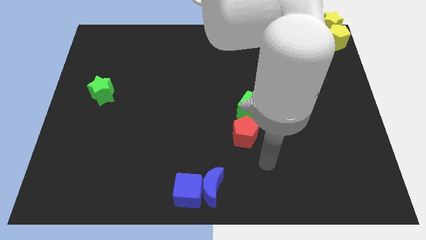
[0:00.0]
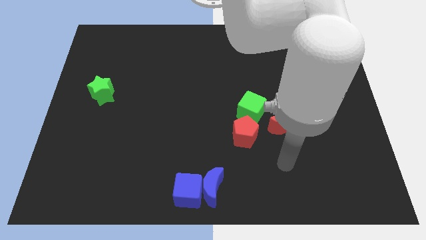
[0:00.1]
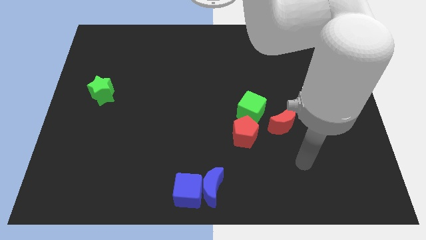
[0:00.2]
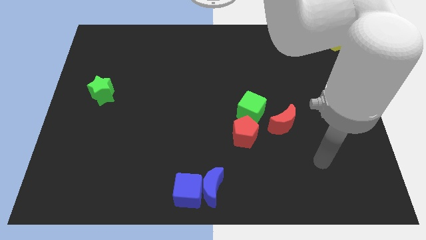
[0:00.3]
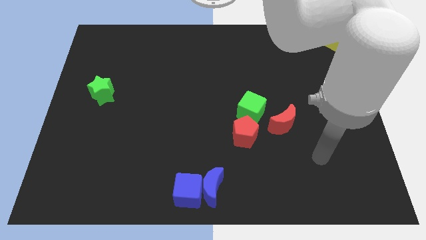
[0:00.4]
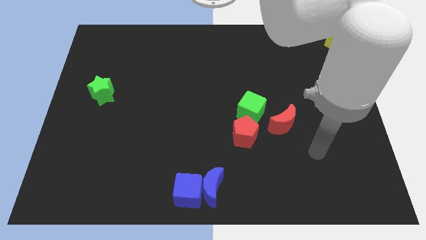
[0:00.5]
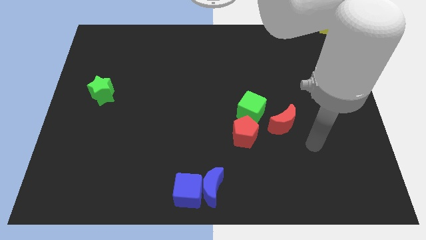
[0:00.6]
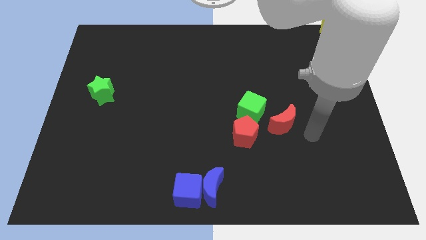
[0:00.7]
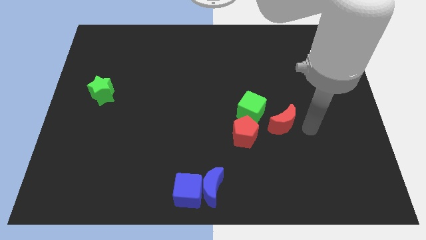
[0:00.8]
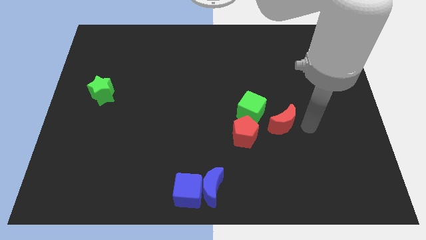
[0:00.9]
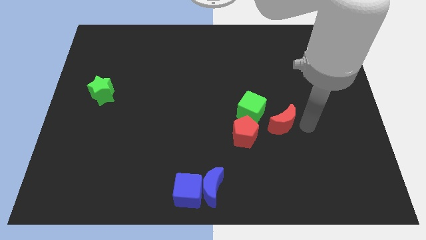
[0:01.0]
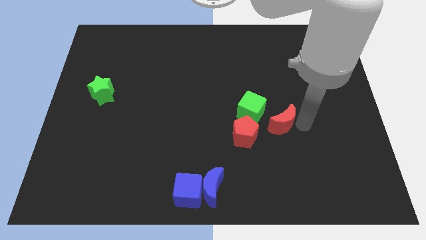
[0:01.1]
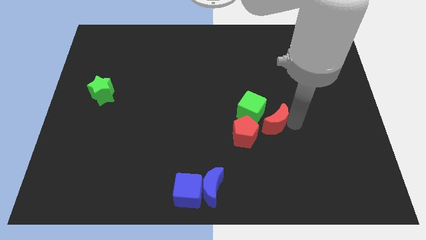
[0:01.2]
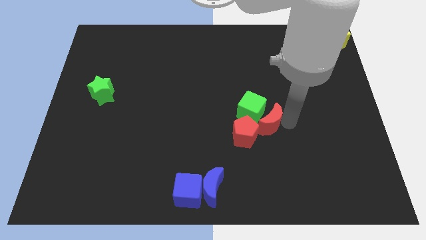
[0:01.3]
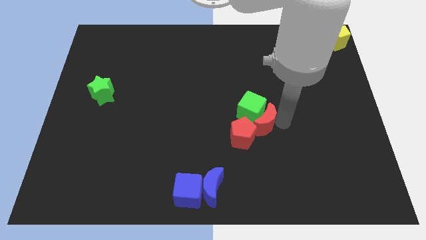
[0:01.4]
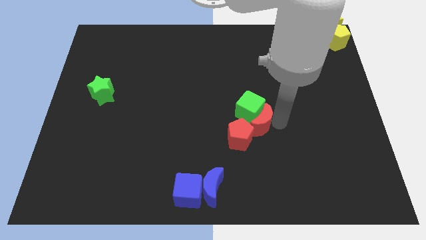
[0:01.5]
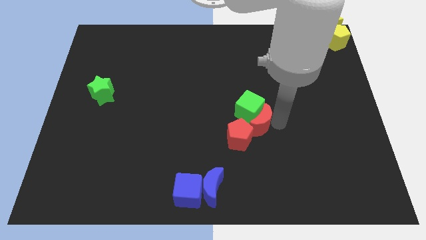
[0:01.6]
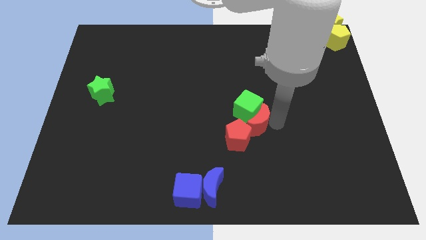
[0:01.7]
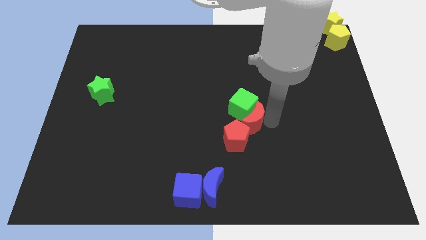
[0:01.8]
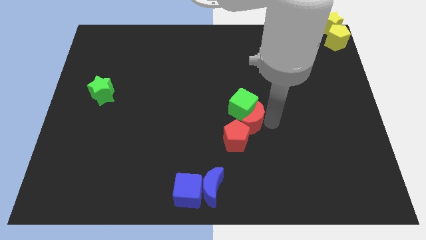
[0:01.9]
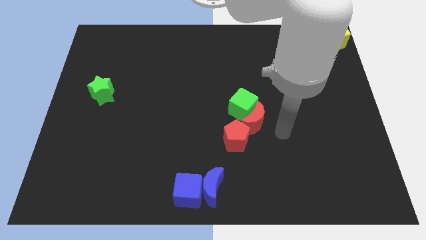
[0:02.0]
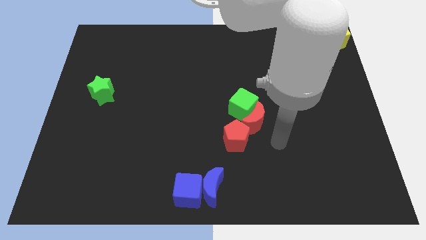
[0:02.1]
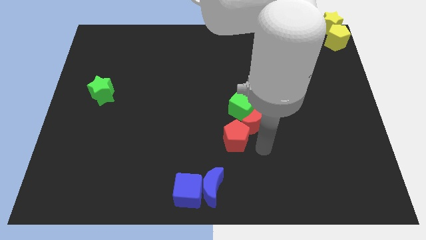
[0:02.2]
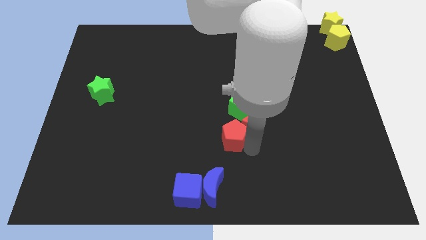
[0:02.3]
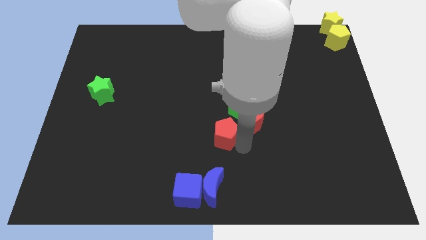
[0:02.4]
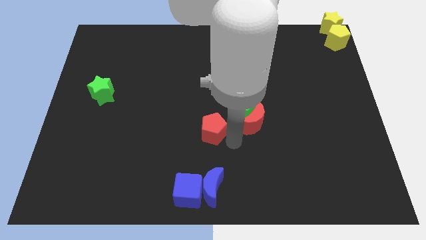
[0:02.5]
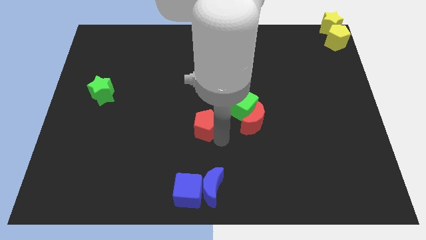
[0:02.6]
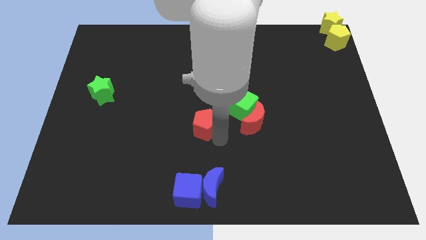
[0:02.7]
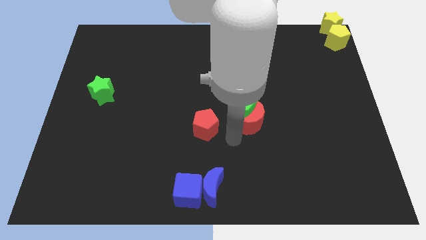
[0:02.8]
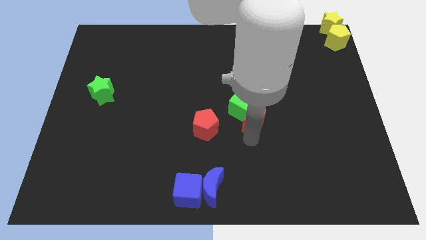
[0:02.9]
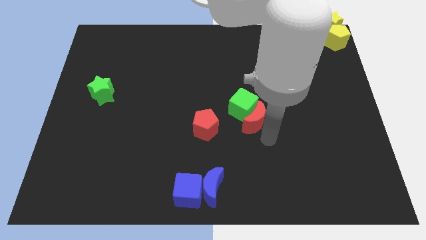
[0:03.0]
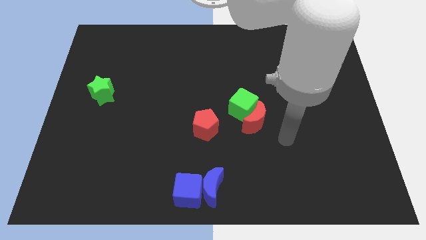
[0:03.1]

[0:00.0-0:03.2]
push green cube with red crescent

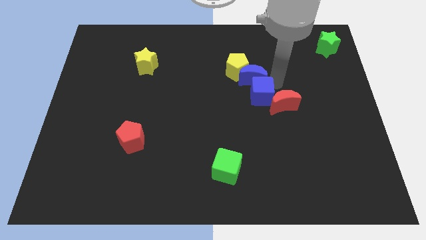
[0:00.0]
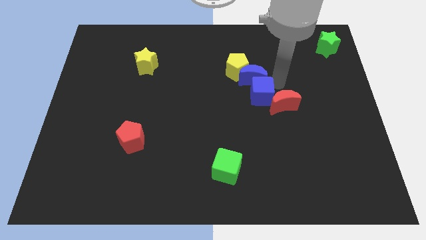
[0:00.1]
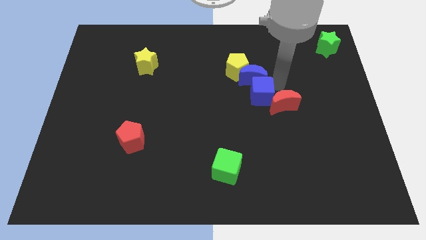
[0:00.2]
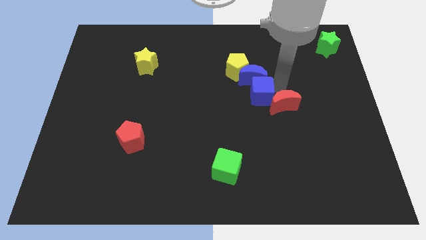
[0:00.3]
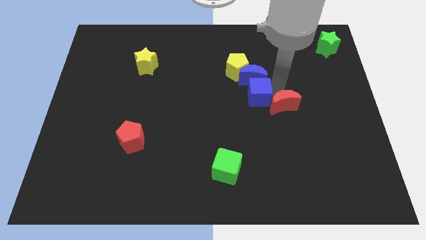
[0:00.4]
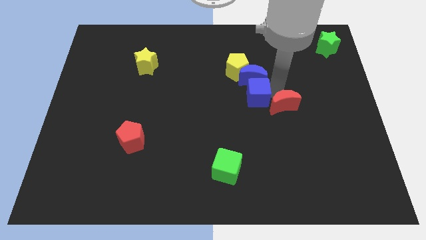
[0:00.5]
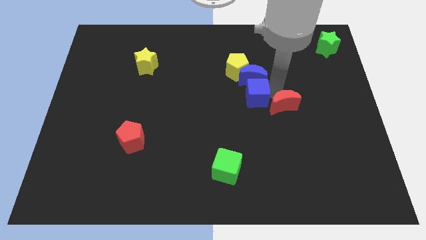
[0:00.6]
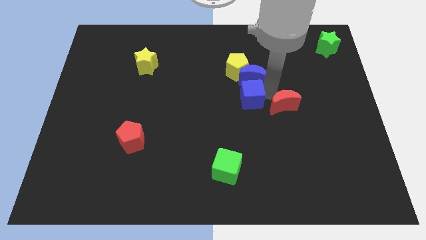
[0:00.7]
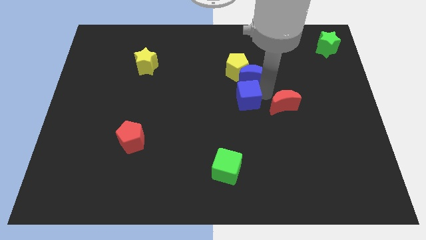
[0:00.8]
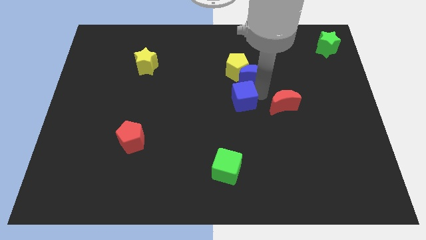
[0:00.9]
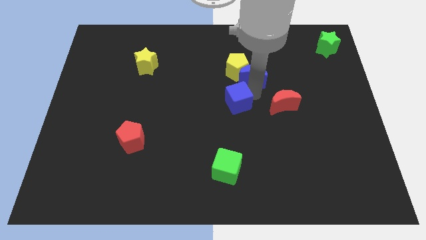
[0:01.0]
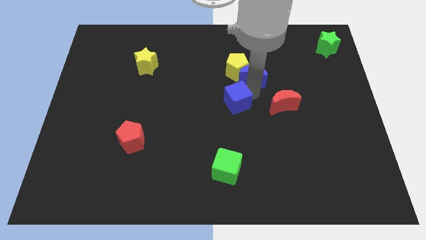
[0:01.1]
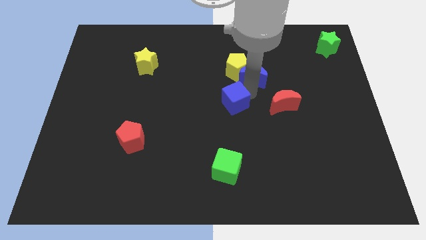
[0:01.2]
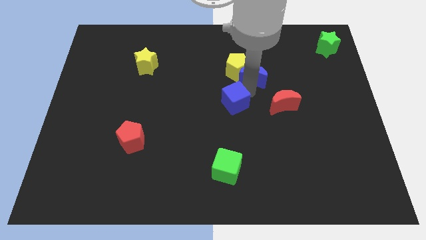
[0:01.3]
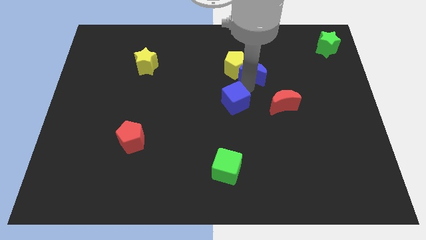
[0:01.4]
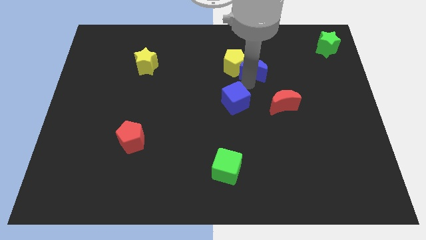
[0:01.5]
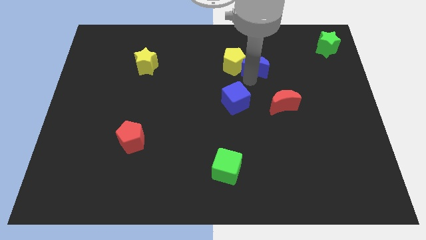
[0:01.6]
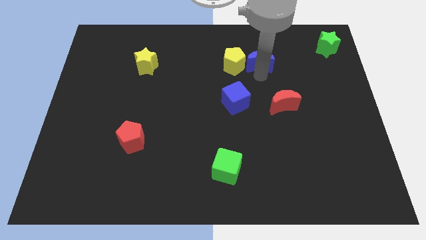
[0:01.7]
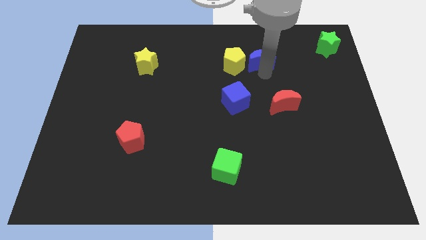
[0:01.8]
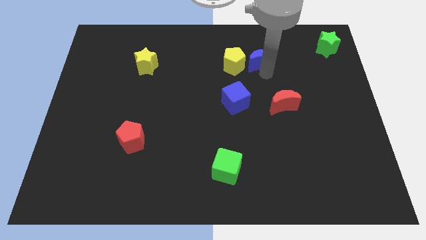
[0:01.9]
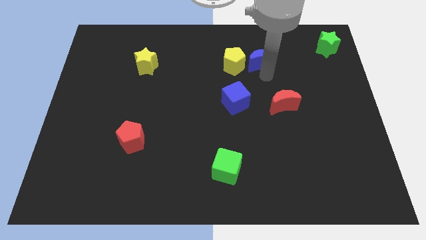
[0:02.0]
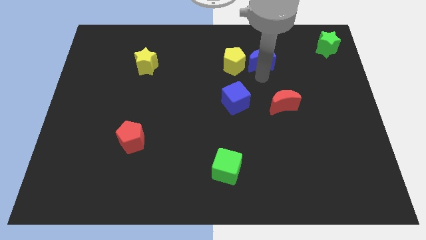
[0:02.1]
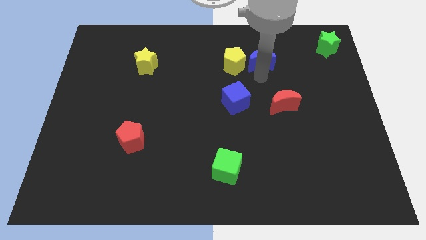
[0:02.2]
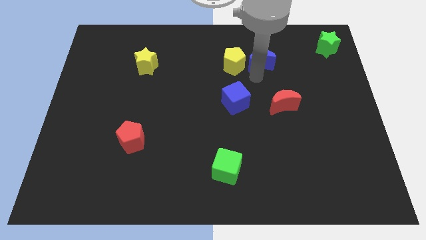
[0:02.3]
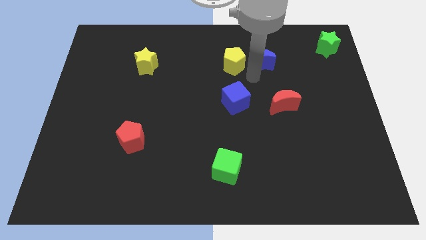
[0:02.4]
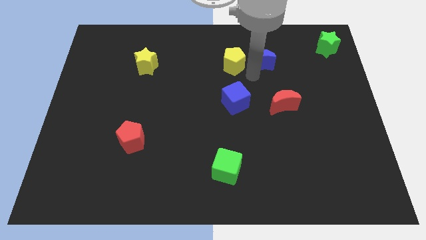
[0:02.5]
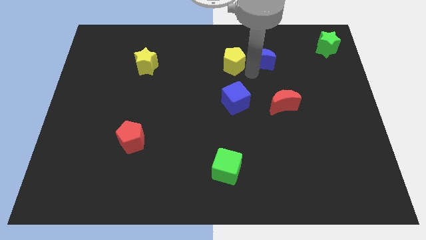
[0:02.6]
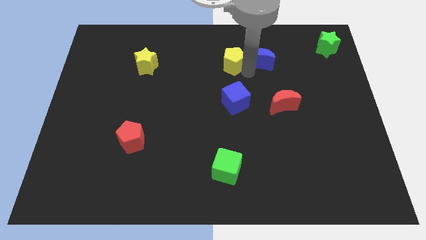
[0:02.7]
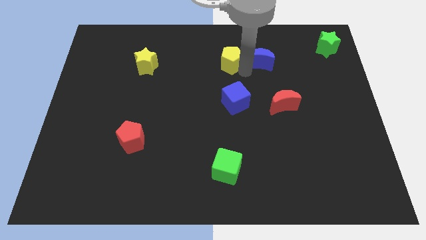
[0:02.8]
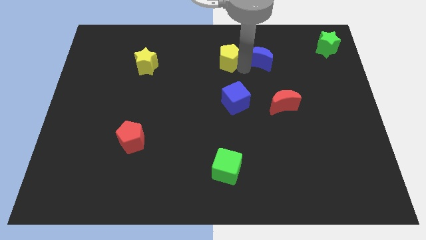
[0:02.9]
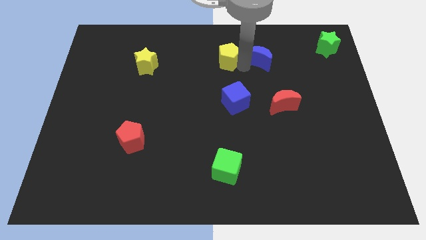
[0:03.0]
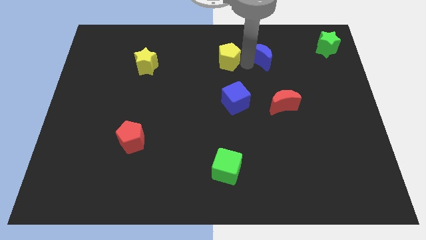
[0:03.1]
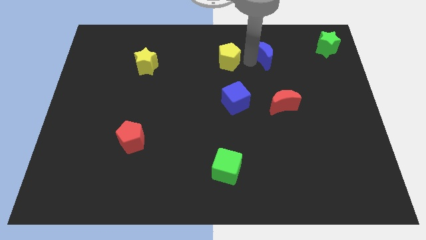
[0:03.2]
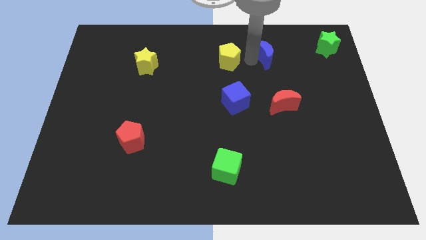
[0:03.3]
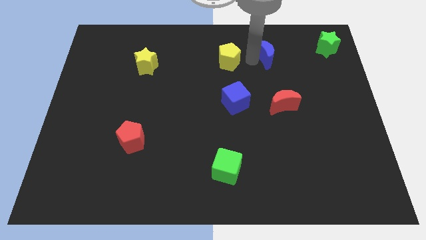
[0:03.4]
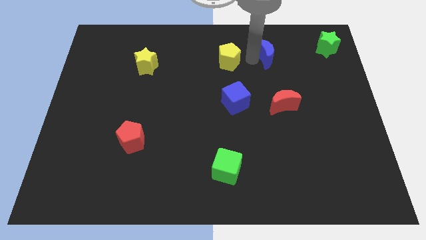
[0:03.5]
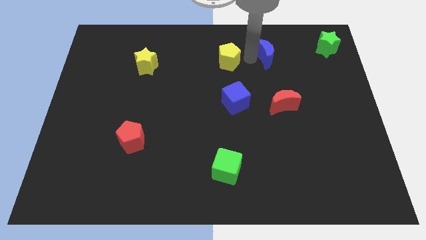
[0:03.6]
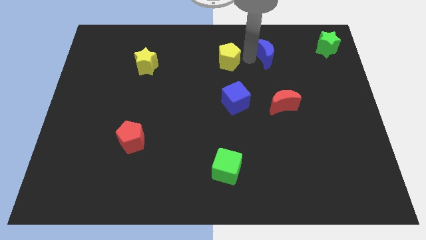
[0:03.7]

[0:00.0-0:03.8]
separate the blue cube blue moon and yellow pentagon

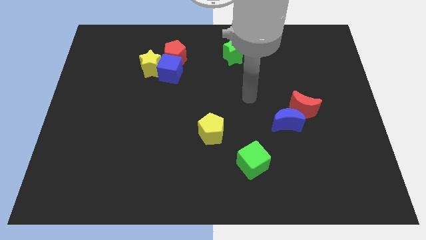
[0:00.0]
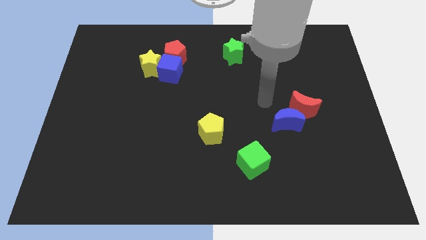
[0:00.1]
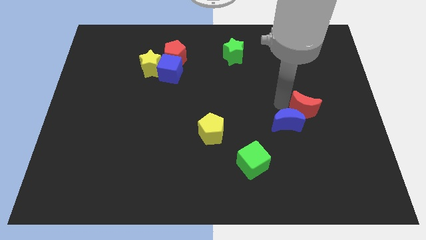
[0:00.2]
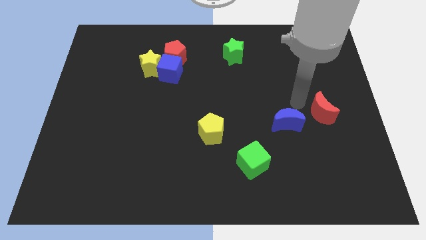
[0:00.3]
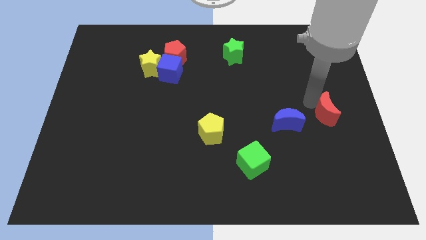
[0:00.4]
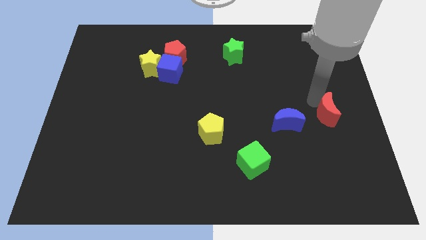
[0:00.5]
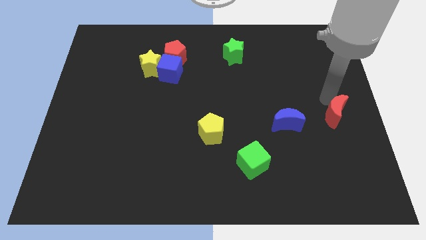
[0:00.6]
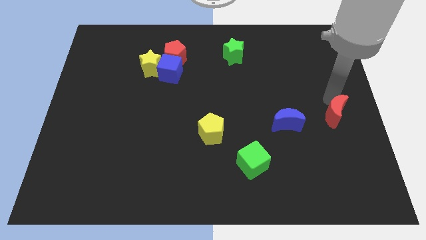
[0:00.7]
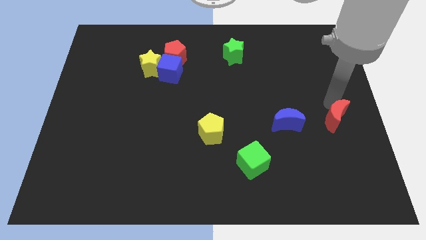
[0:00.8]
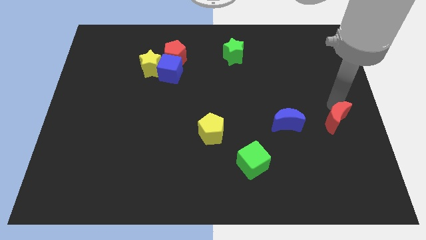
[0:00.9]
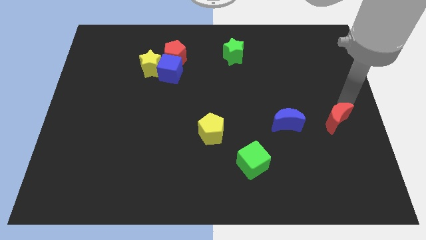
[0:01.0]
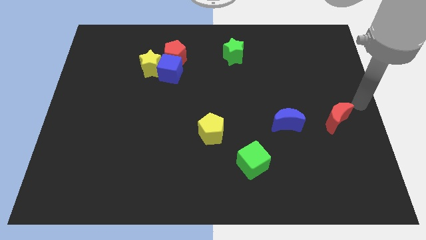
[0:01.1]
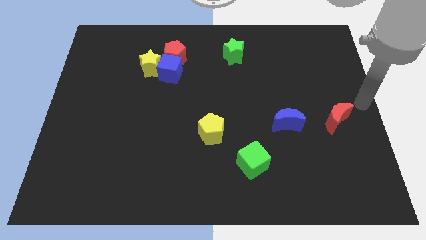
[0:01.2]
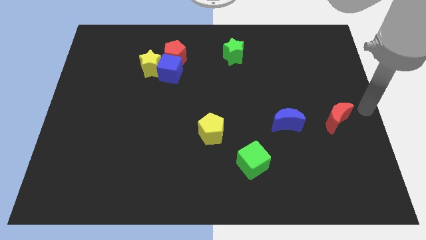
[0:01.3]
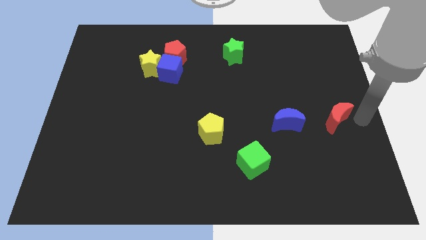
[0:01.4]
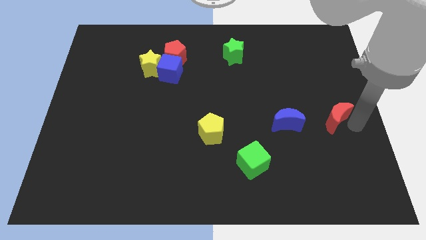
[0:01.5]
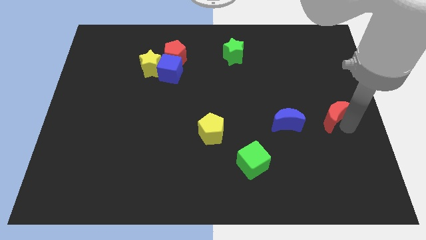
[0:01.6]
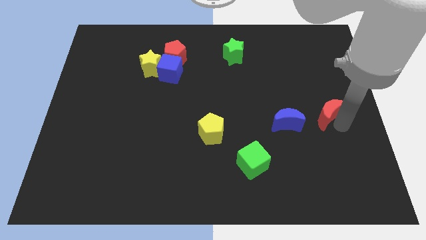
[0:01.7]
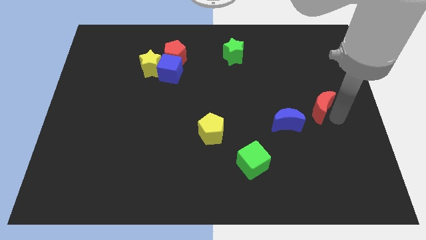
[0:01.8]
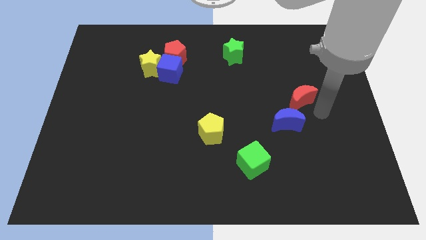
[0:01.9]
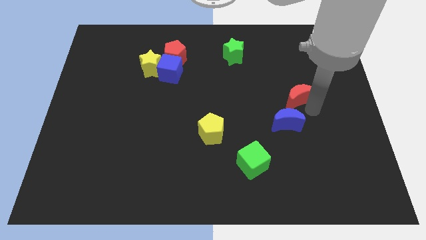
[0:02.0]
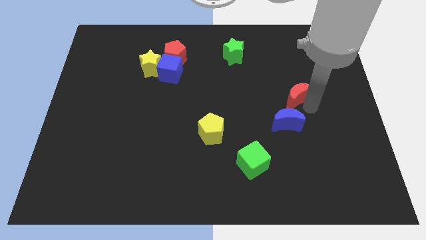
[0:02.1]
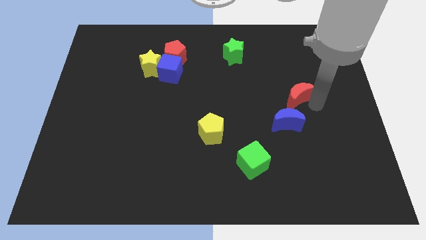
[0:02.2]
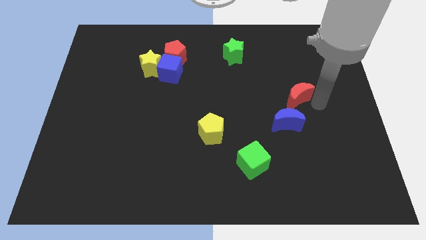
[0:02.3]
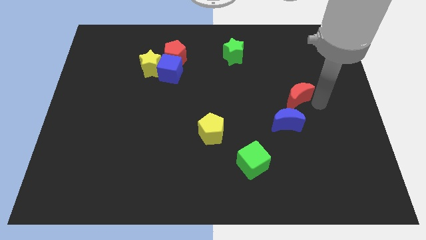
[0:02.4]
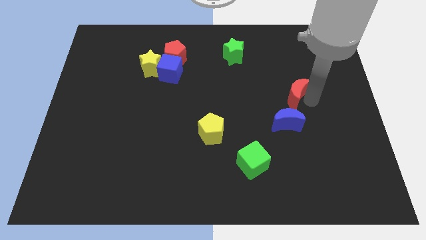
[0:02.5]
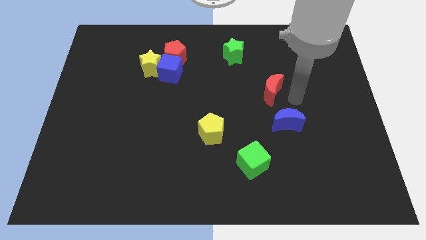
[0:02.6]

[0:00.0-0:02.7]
place red crescent above blue crescent
